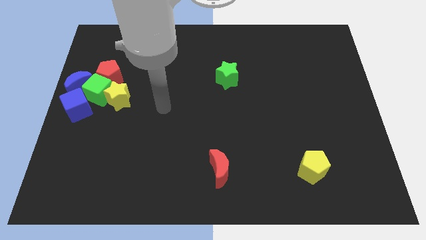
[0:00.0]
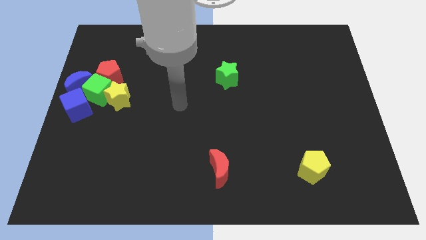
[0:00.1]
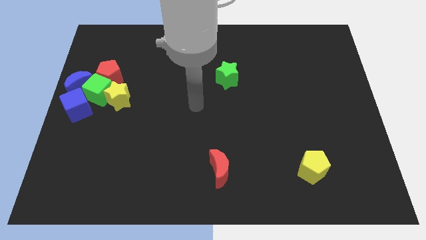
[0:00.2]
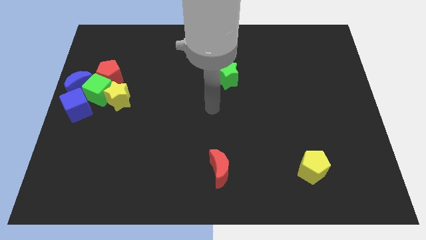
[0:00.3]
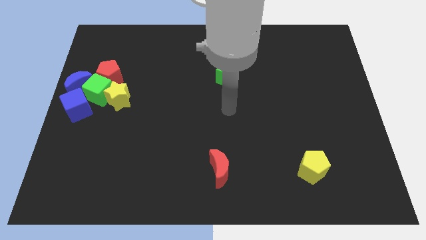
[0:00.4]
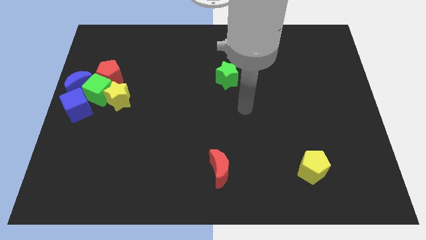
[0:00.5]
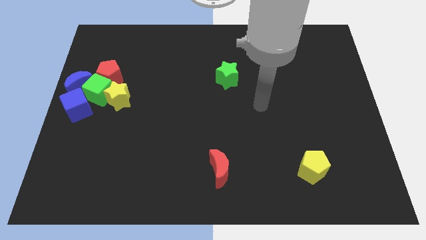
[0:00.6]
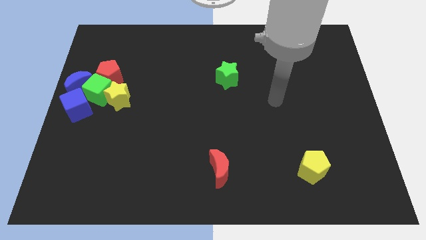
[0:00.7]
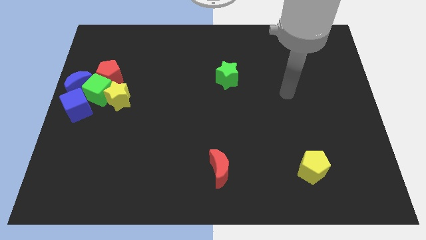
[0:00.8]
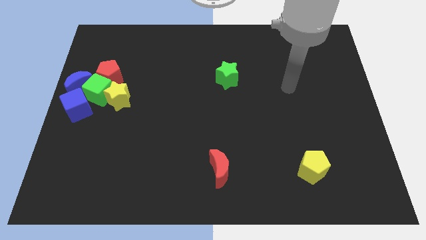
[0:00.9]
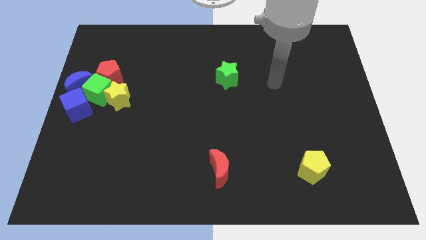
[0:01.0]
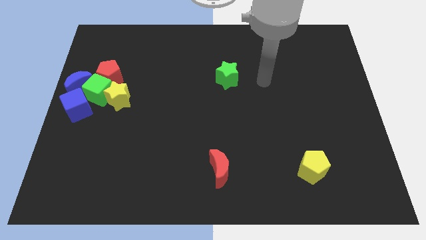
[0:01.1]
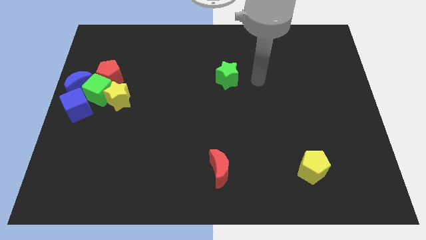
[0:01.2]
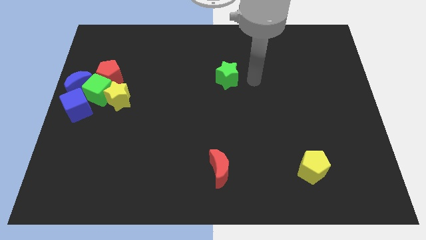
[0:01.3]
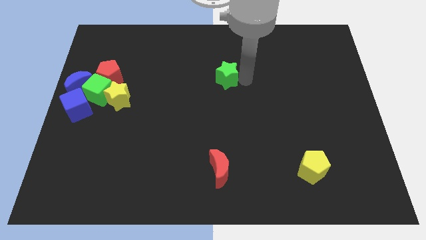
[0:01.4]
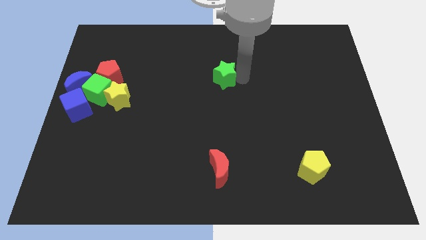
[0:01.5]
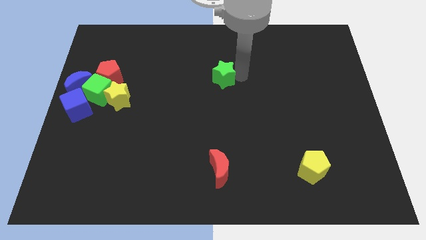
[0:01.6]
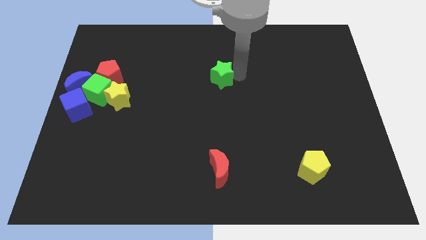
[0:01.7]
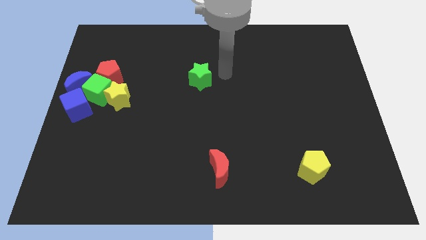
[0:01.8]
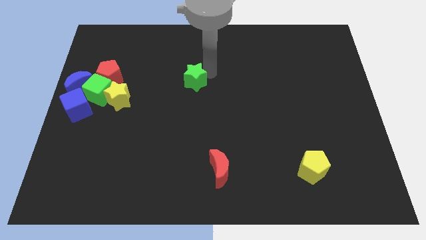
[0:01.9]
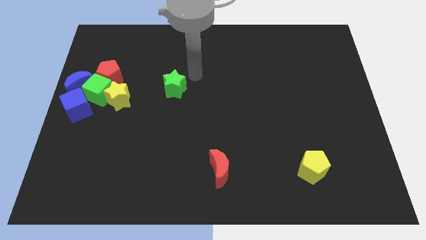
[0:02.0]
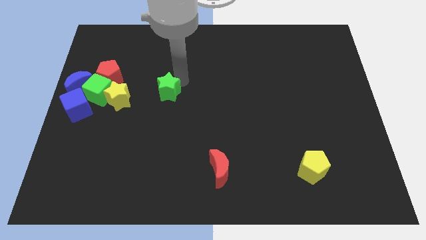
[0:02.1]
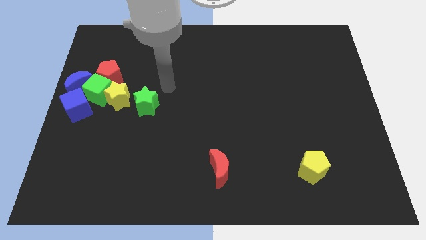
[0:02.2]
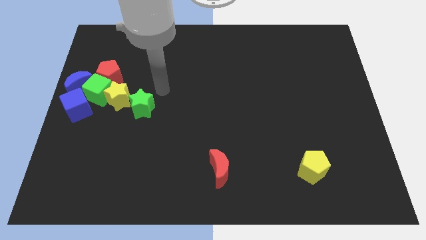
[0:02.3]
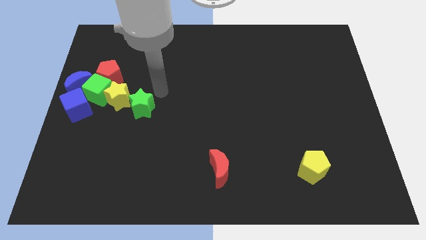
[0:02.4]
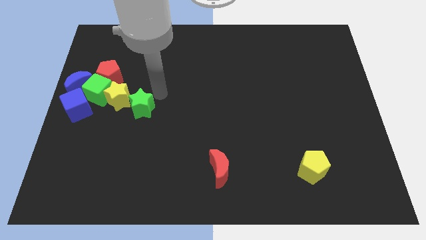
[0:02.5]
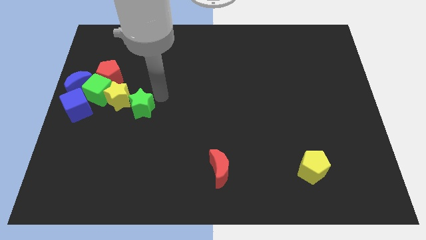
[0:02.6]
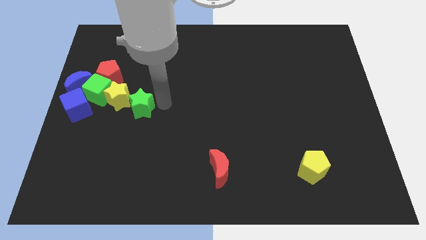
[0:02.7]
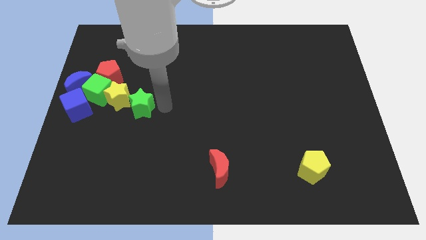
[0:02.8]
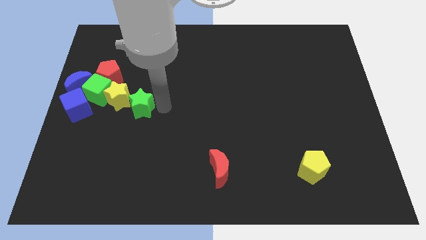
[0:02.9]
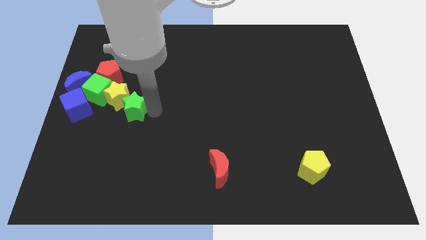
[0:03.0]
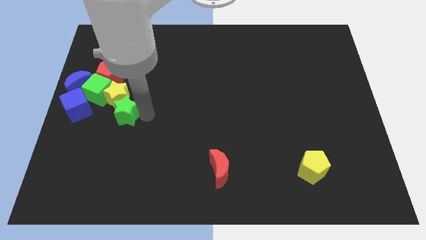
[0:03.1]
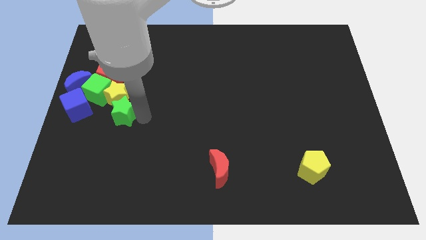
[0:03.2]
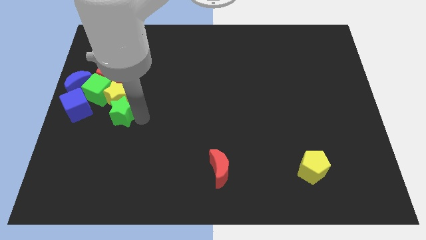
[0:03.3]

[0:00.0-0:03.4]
place the green star towards the group of blocks

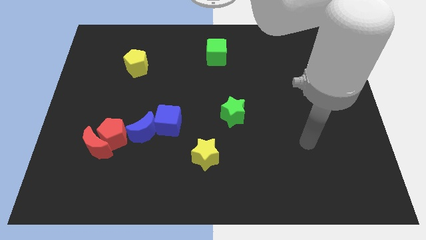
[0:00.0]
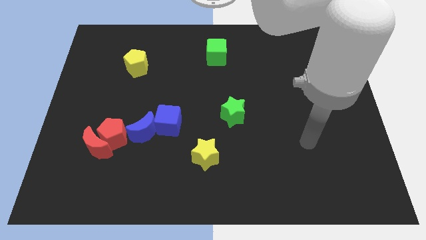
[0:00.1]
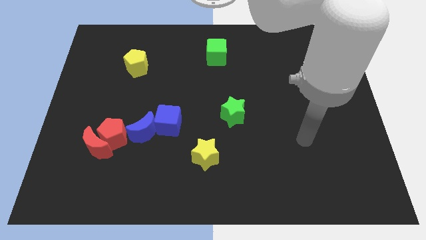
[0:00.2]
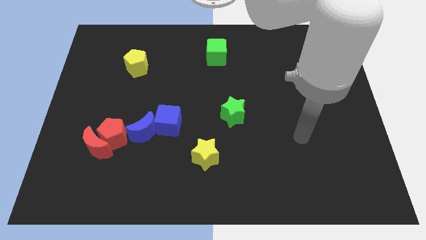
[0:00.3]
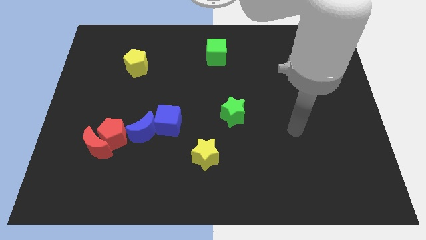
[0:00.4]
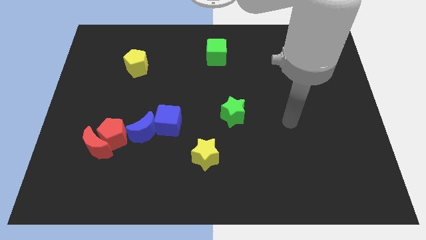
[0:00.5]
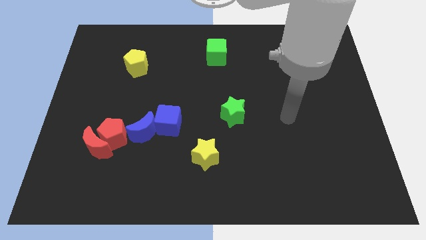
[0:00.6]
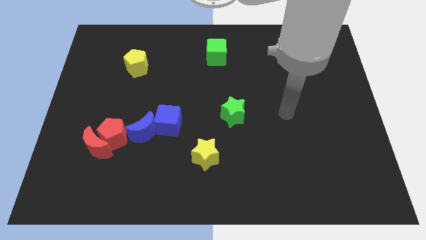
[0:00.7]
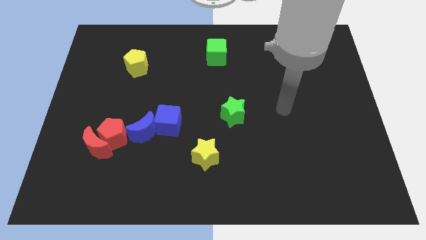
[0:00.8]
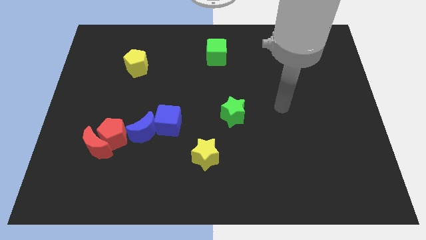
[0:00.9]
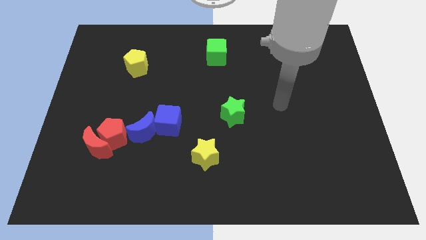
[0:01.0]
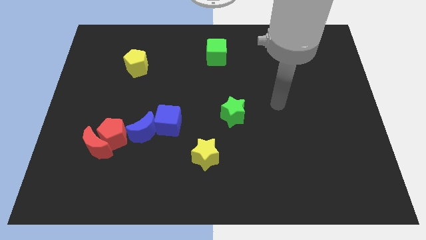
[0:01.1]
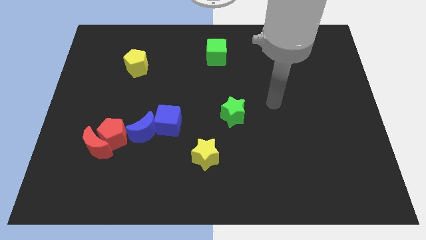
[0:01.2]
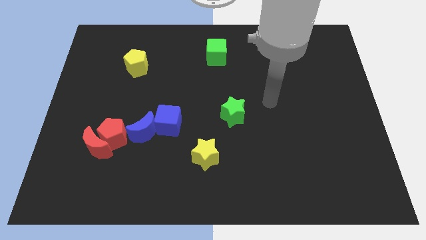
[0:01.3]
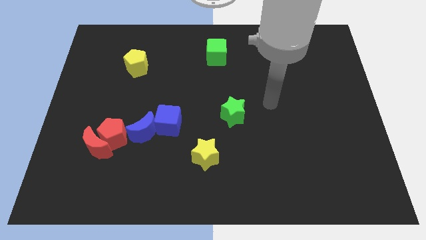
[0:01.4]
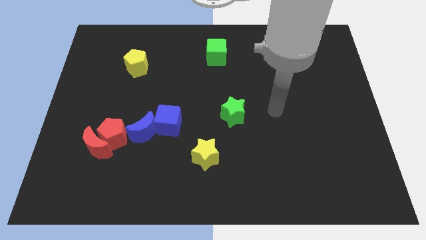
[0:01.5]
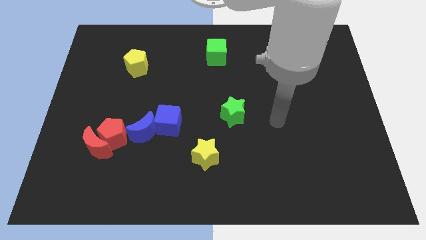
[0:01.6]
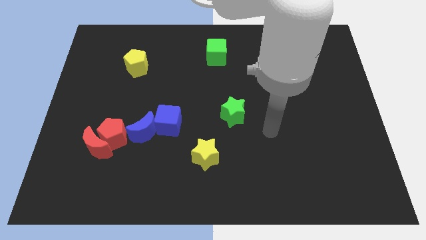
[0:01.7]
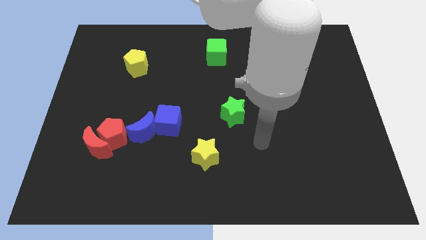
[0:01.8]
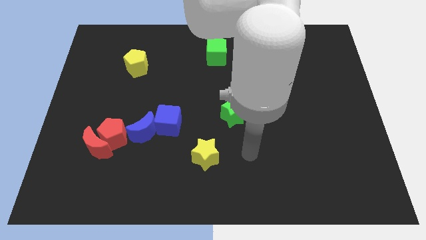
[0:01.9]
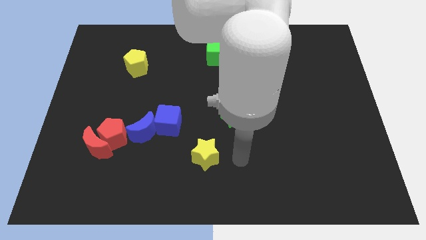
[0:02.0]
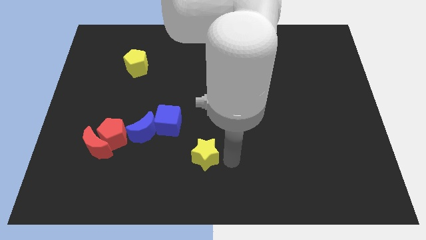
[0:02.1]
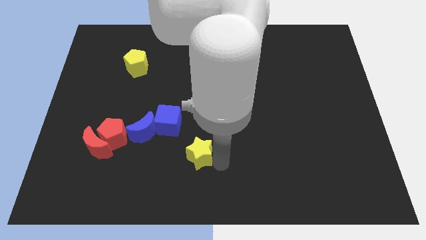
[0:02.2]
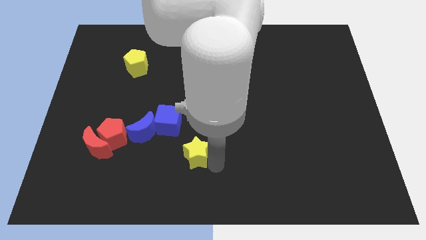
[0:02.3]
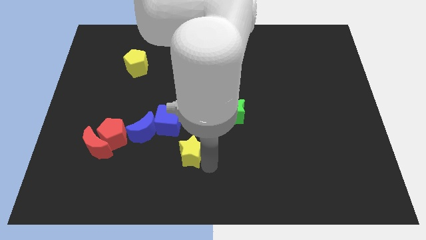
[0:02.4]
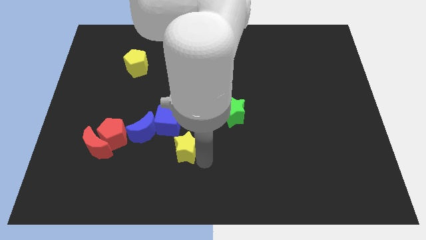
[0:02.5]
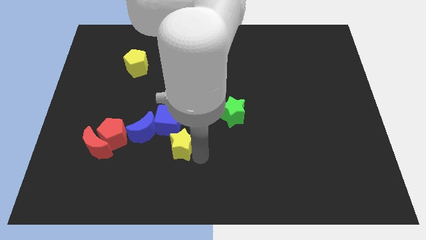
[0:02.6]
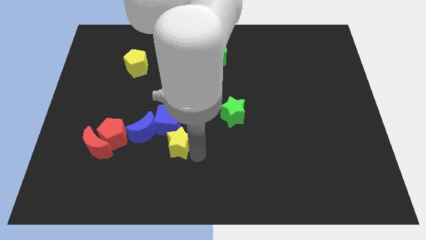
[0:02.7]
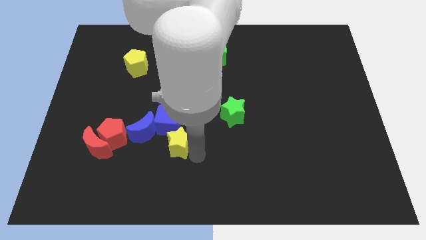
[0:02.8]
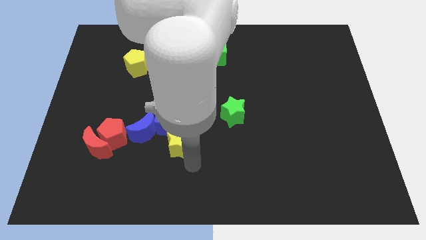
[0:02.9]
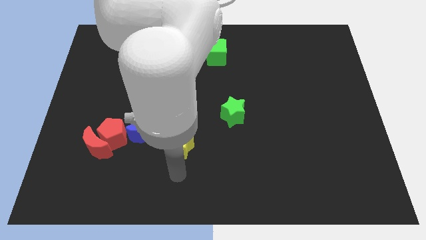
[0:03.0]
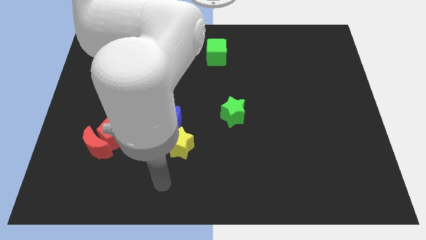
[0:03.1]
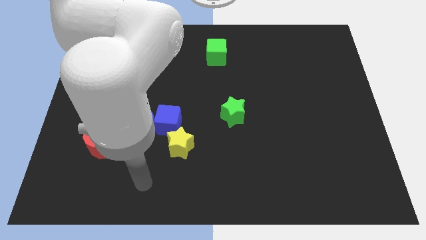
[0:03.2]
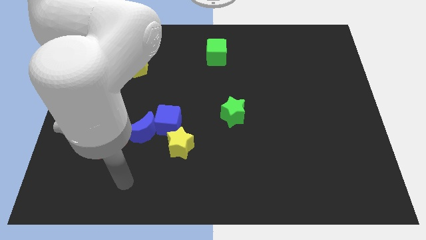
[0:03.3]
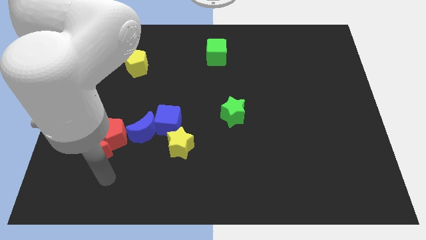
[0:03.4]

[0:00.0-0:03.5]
move the yellow star to the bottom right side of the blue cube

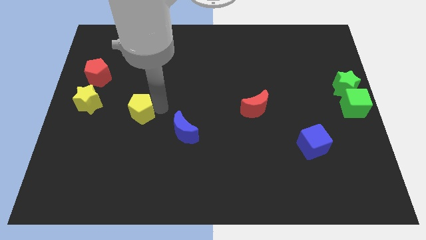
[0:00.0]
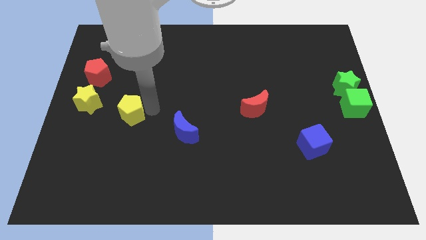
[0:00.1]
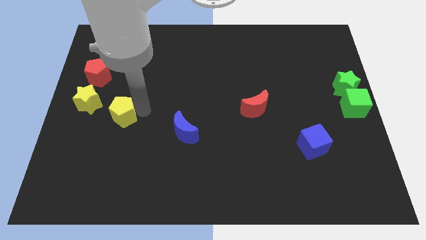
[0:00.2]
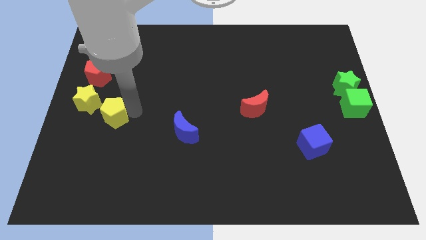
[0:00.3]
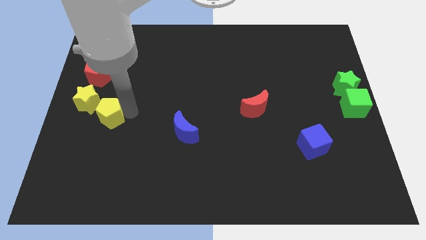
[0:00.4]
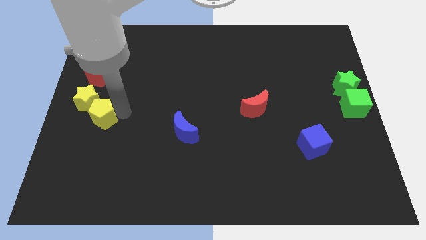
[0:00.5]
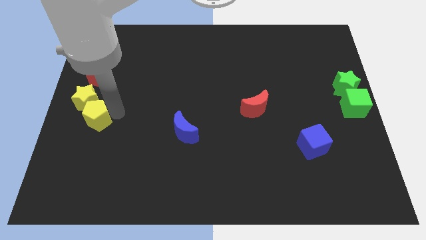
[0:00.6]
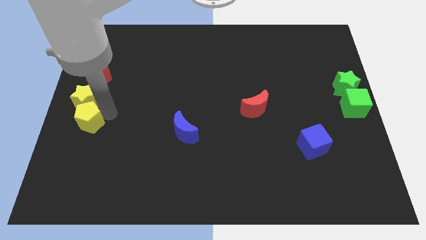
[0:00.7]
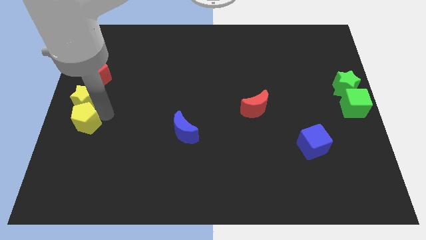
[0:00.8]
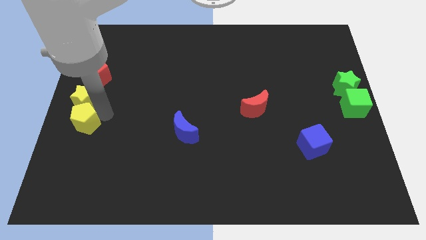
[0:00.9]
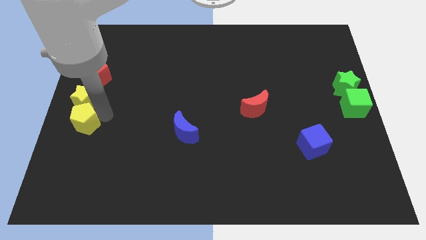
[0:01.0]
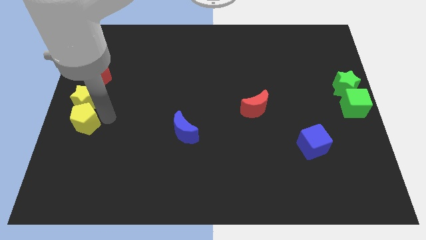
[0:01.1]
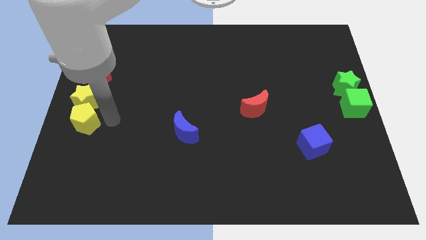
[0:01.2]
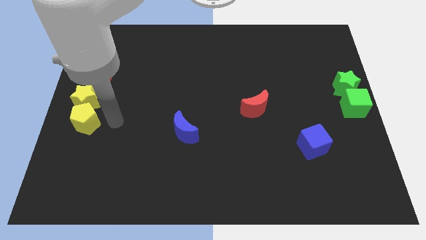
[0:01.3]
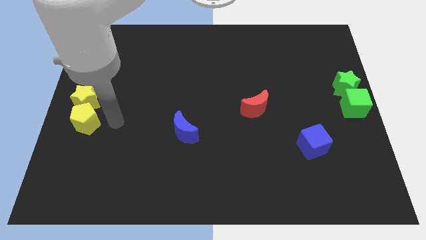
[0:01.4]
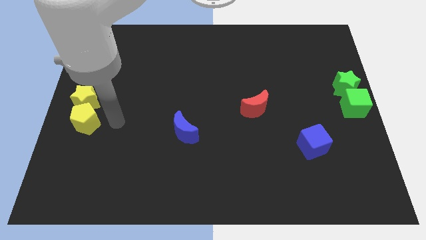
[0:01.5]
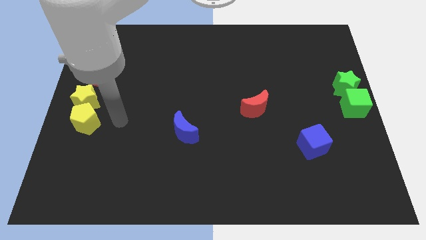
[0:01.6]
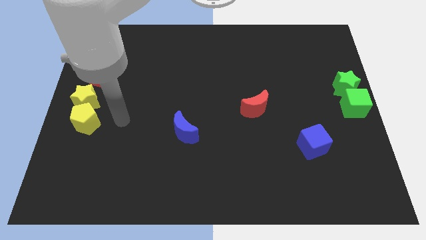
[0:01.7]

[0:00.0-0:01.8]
place the yellow pentagon below the yellow star

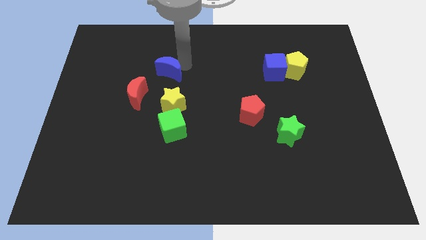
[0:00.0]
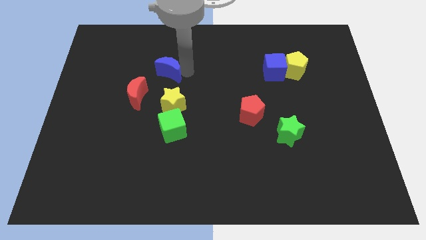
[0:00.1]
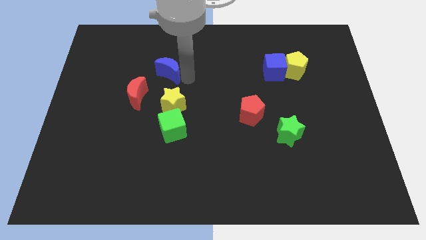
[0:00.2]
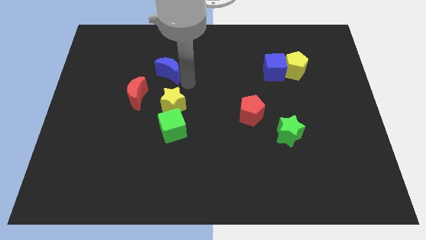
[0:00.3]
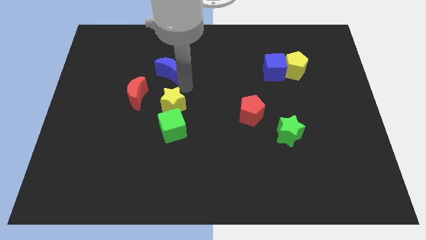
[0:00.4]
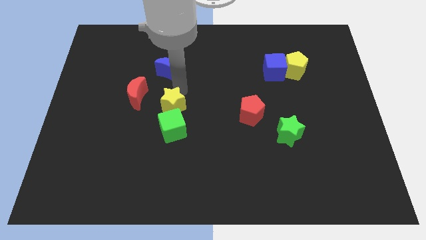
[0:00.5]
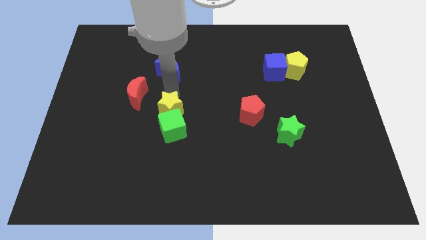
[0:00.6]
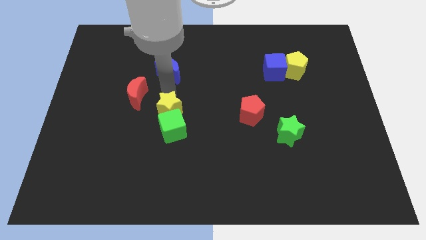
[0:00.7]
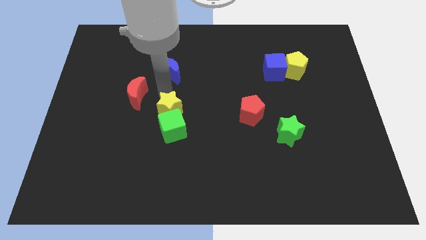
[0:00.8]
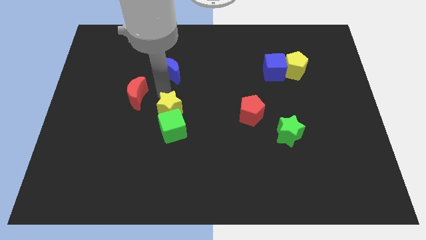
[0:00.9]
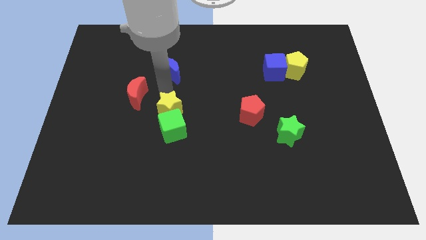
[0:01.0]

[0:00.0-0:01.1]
slightly move the yellow star close to the green cube
